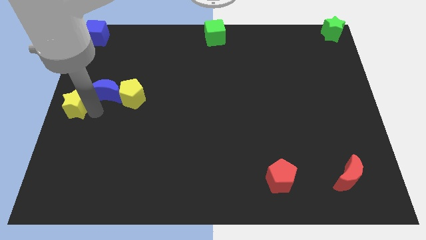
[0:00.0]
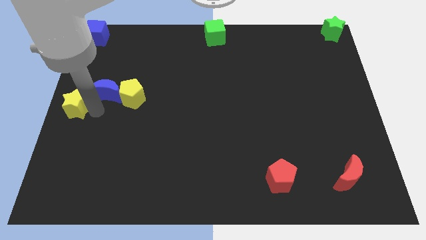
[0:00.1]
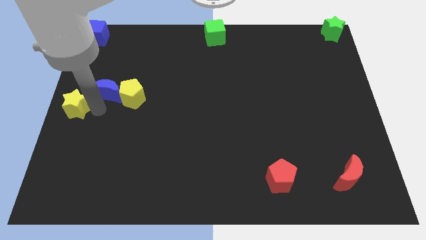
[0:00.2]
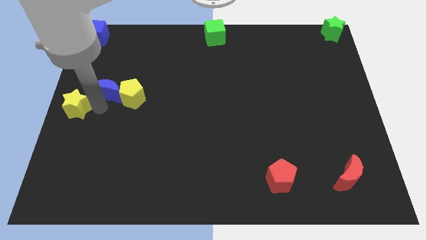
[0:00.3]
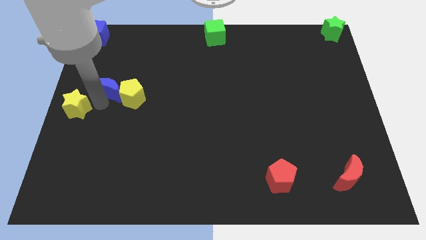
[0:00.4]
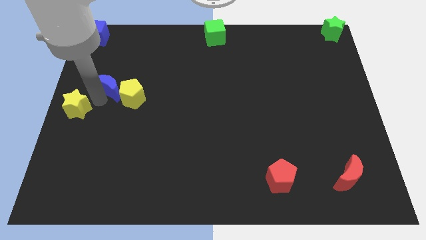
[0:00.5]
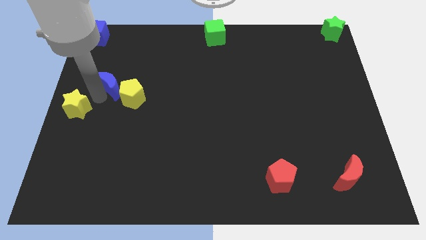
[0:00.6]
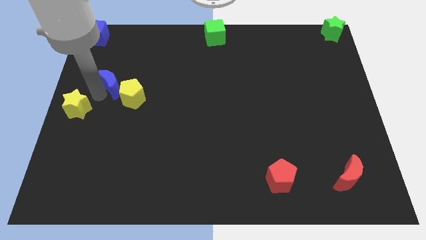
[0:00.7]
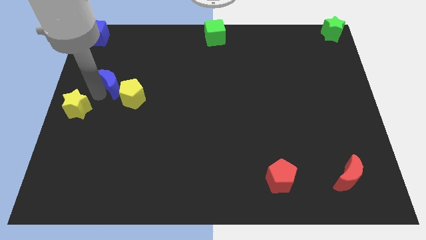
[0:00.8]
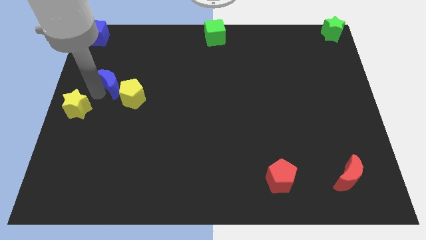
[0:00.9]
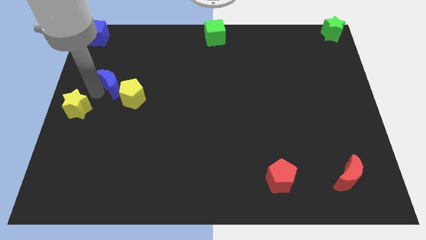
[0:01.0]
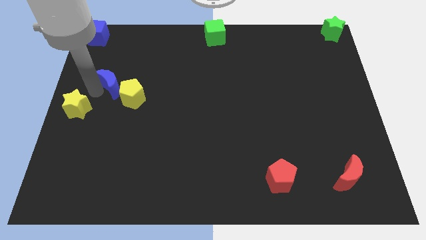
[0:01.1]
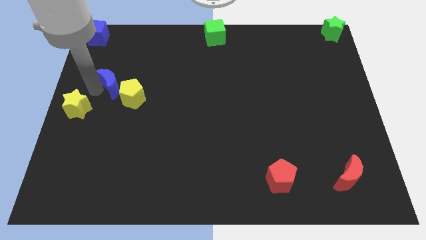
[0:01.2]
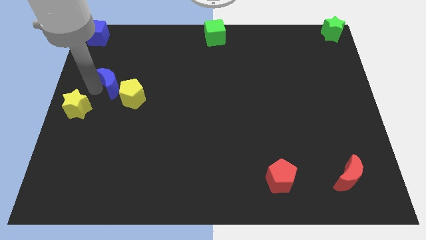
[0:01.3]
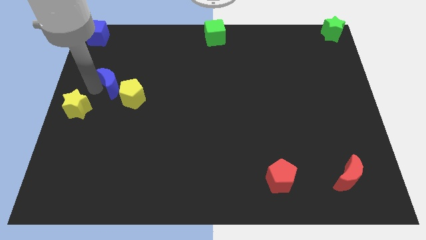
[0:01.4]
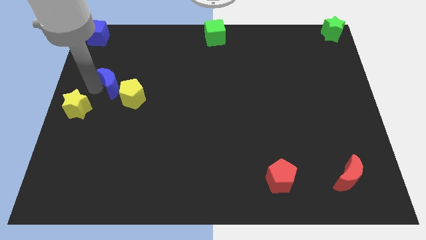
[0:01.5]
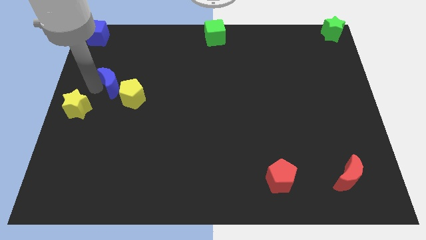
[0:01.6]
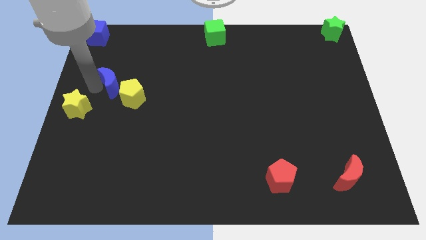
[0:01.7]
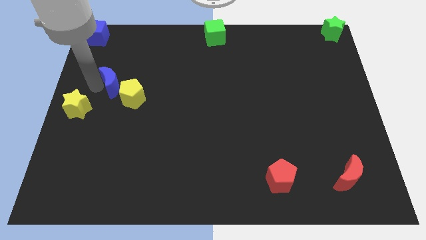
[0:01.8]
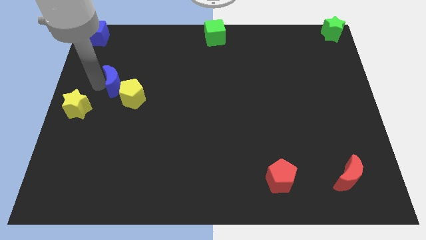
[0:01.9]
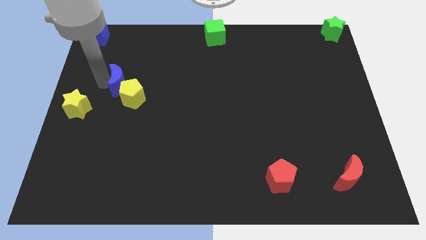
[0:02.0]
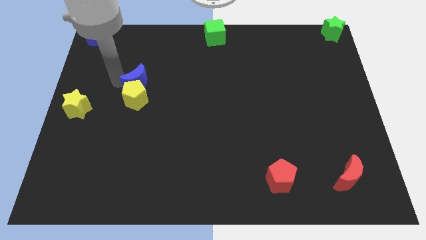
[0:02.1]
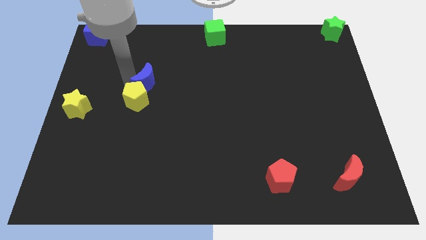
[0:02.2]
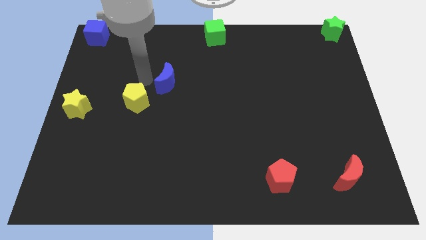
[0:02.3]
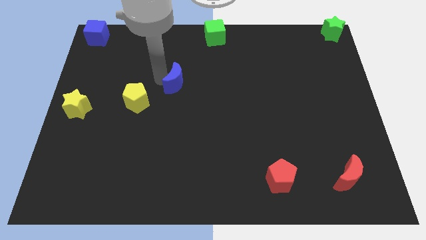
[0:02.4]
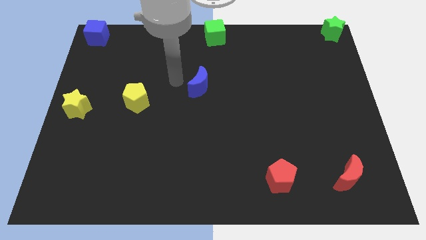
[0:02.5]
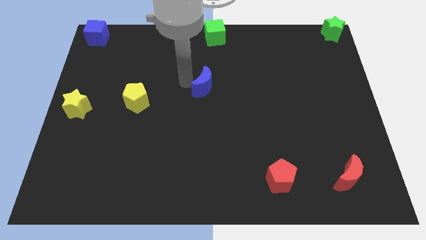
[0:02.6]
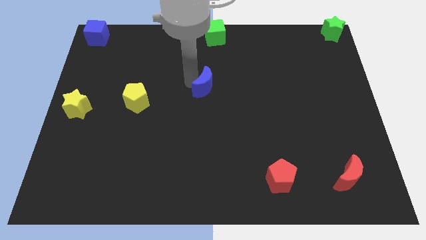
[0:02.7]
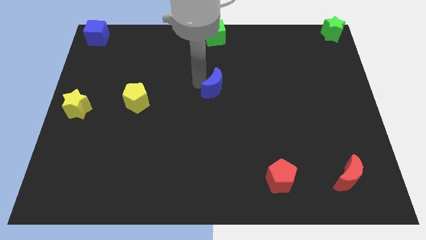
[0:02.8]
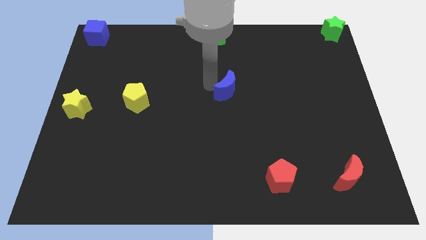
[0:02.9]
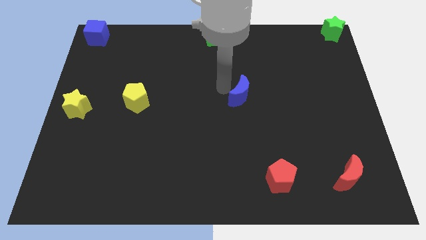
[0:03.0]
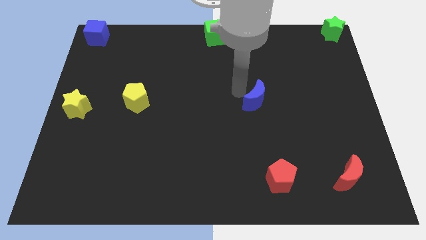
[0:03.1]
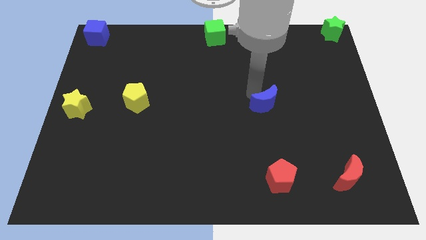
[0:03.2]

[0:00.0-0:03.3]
drag the blue moon away from the yellow pentagon

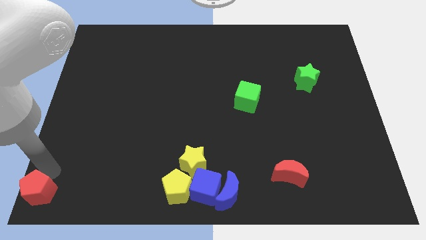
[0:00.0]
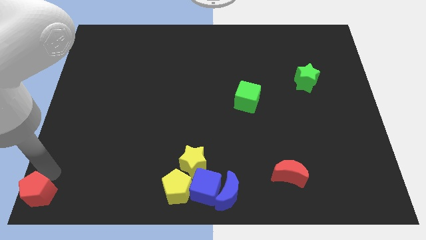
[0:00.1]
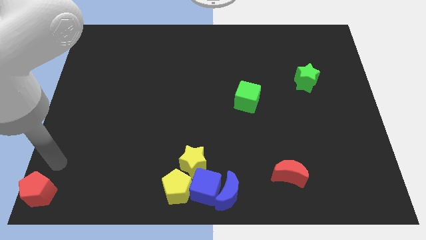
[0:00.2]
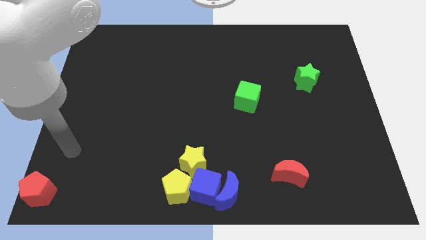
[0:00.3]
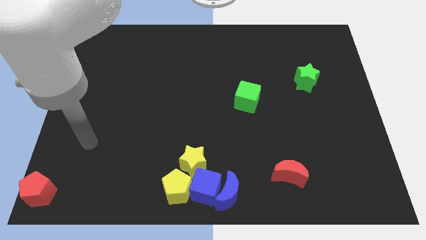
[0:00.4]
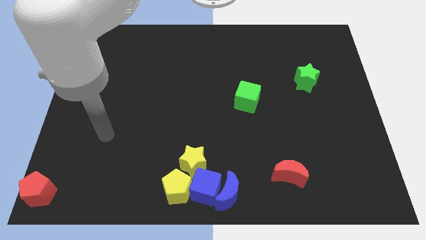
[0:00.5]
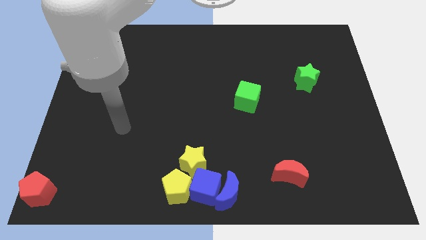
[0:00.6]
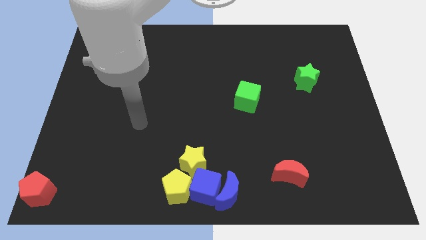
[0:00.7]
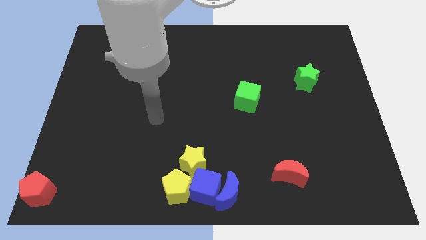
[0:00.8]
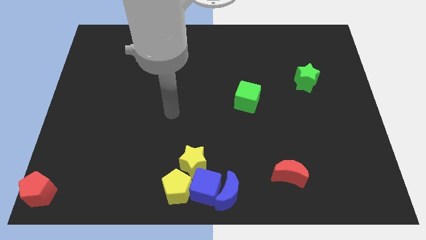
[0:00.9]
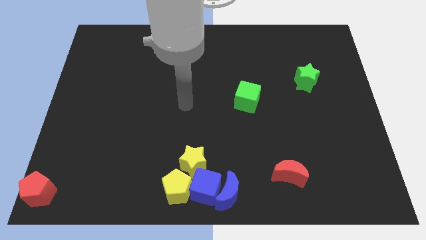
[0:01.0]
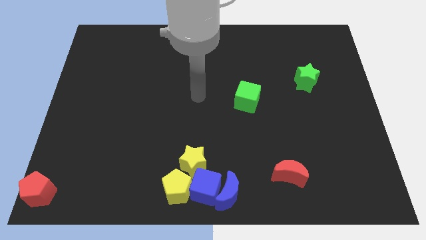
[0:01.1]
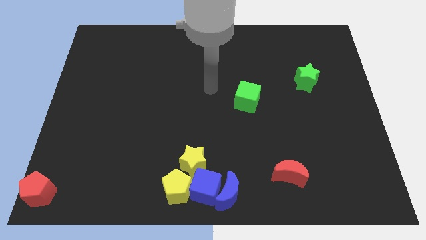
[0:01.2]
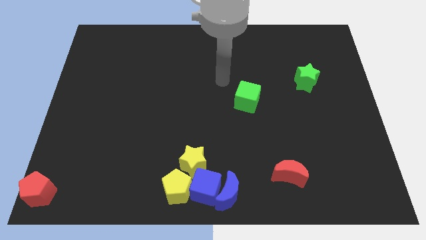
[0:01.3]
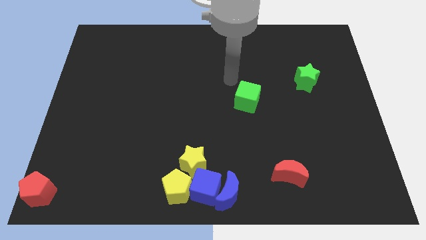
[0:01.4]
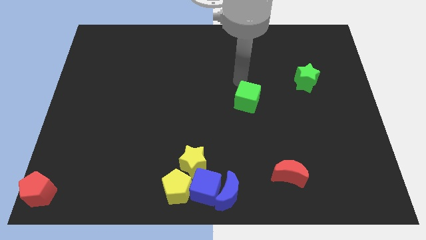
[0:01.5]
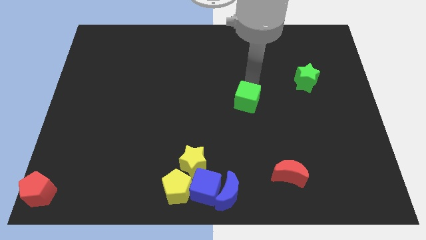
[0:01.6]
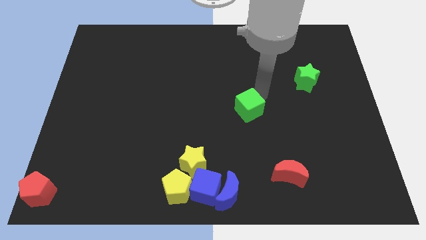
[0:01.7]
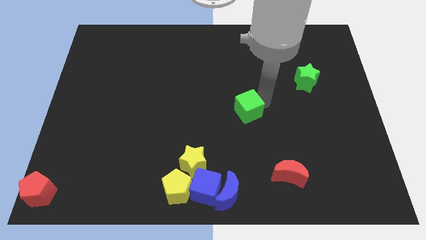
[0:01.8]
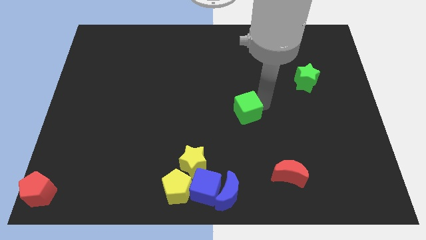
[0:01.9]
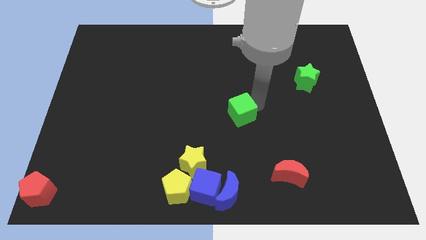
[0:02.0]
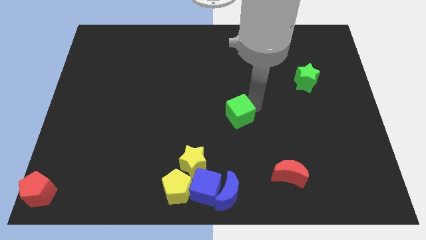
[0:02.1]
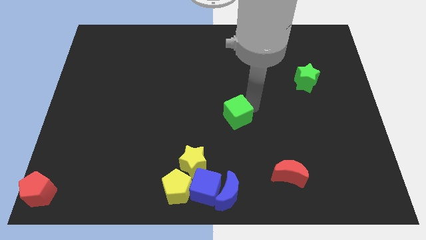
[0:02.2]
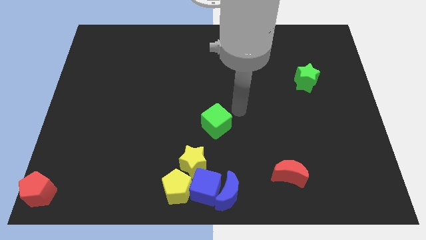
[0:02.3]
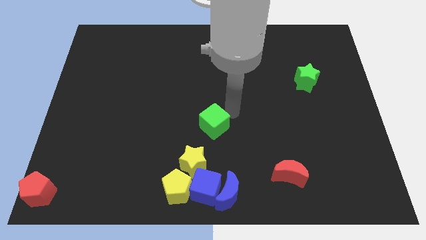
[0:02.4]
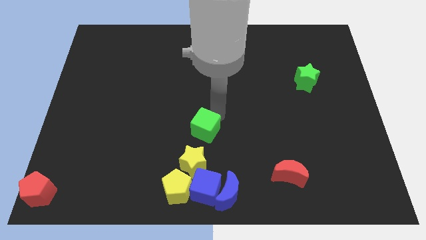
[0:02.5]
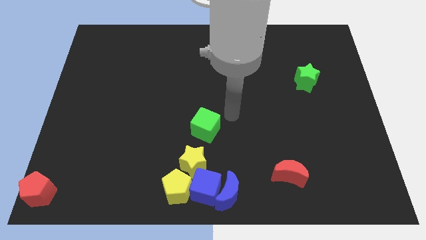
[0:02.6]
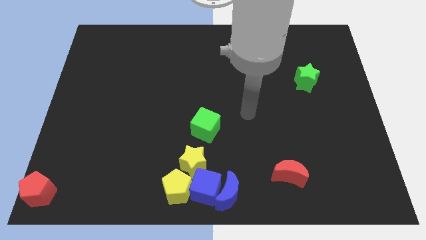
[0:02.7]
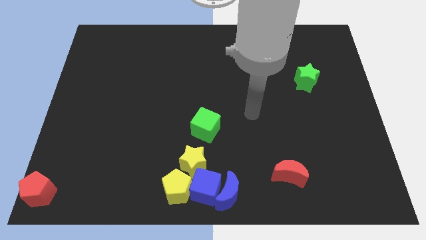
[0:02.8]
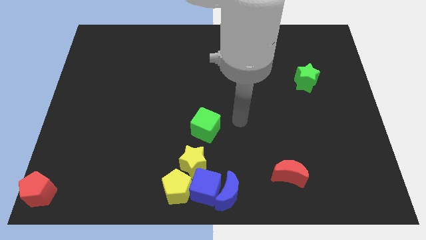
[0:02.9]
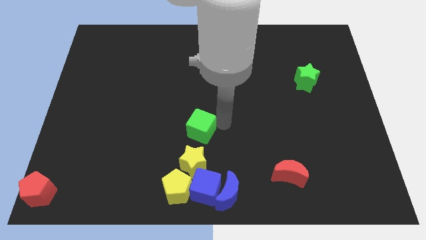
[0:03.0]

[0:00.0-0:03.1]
place the green cube vertically above the top side of the yellow star

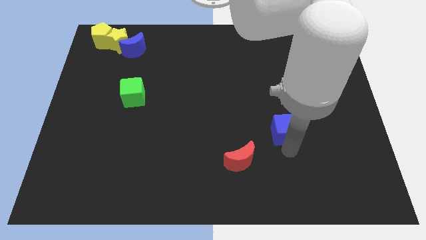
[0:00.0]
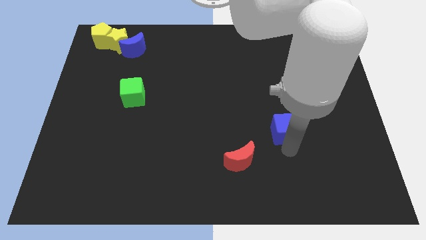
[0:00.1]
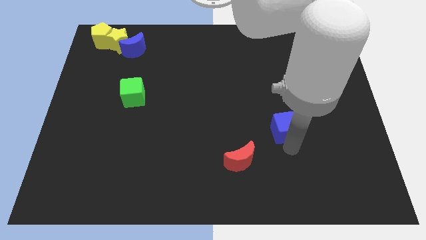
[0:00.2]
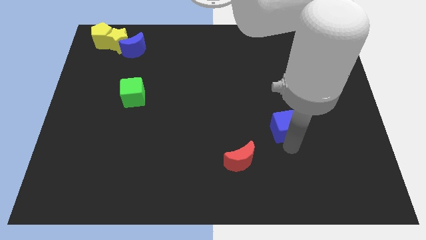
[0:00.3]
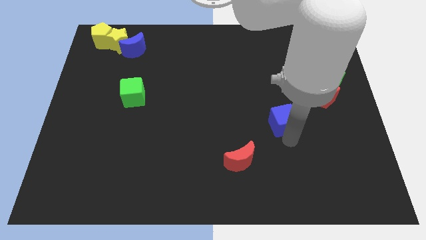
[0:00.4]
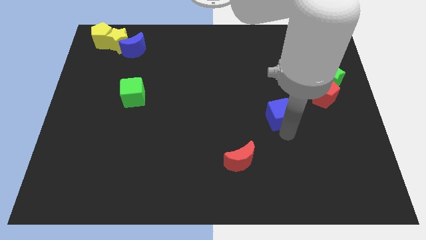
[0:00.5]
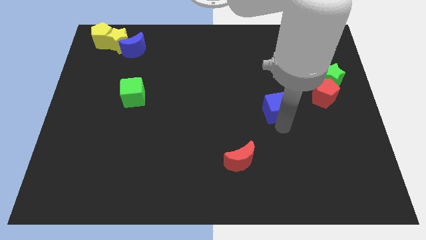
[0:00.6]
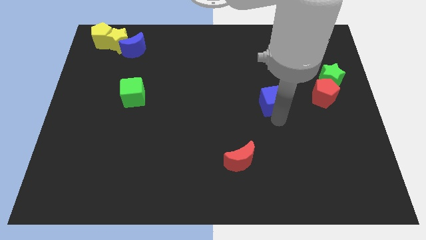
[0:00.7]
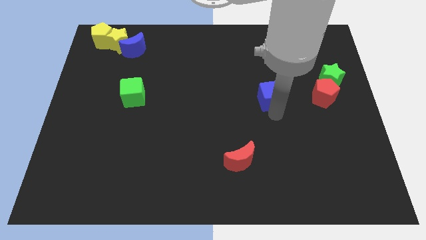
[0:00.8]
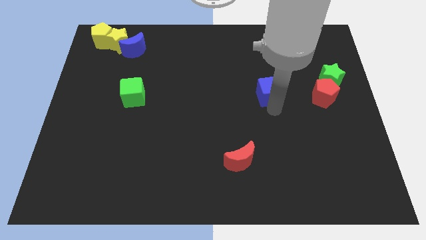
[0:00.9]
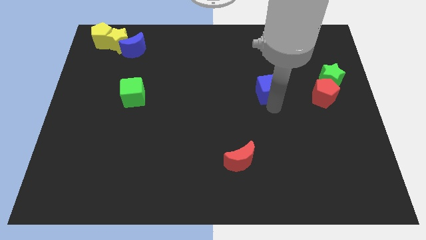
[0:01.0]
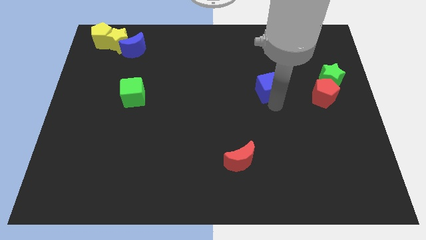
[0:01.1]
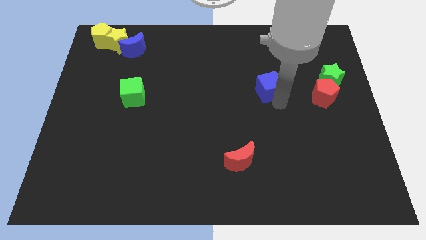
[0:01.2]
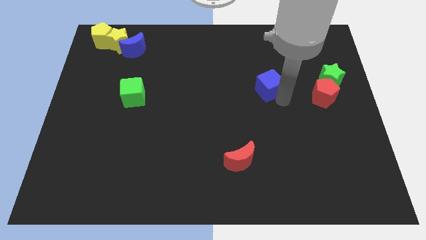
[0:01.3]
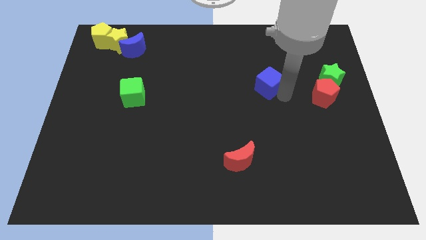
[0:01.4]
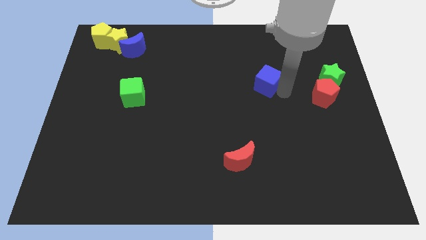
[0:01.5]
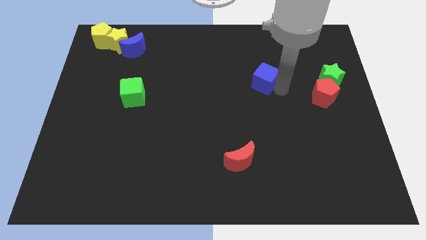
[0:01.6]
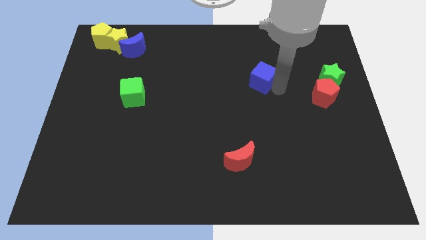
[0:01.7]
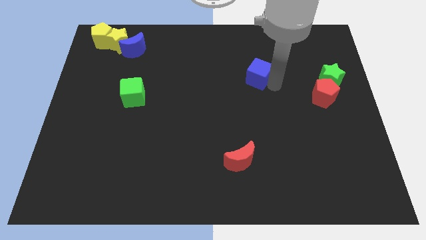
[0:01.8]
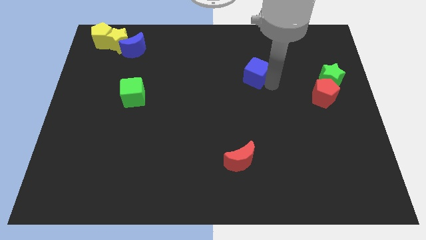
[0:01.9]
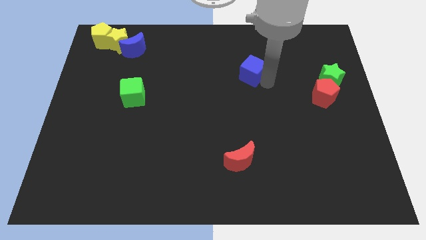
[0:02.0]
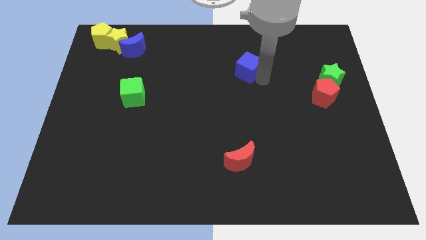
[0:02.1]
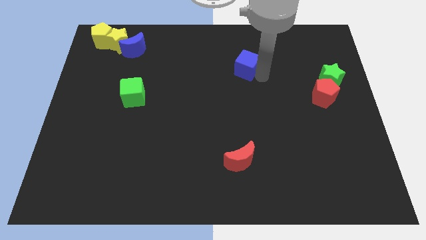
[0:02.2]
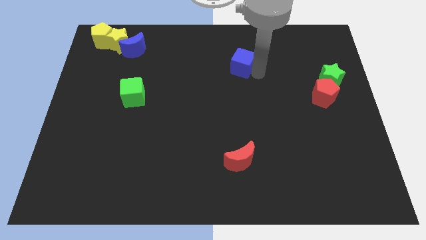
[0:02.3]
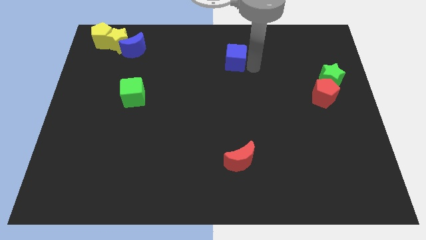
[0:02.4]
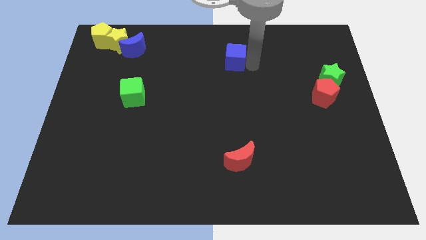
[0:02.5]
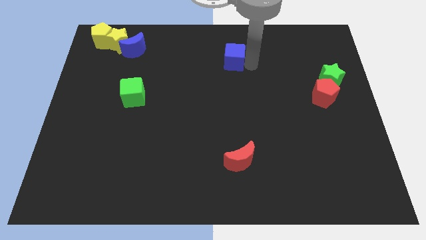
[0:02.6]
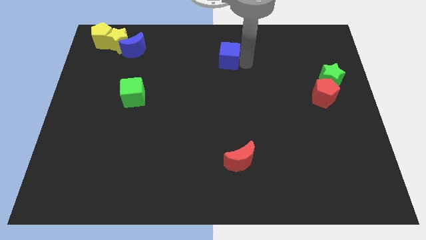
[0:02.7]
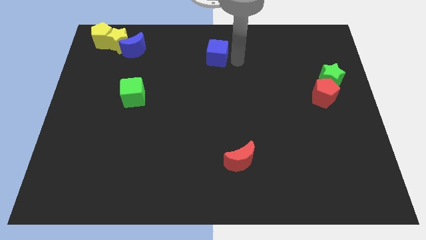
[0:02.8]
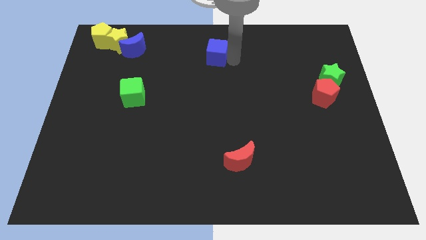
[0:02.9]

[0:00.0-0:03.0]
push blue cube above red crescent
